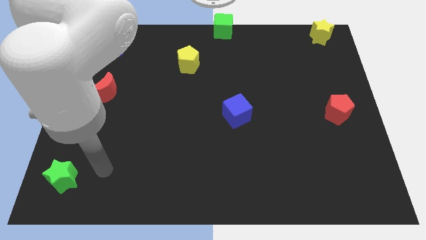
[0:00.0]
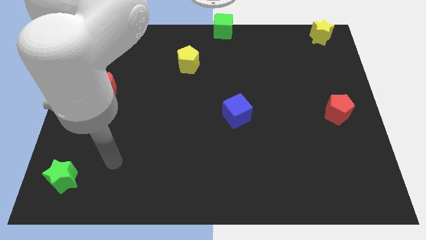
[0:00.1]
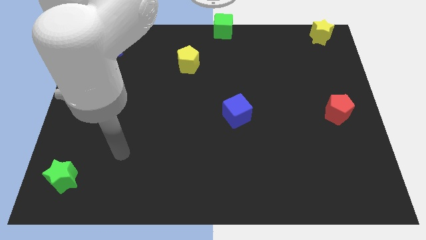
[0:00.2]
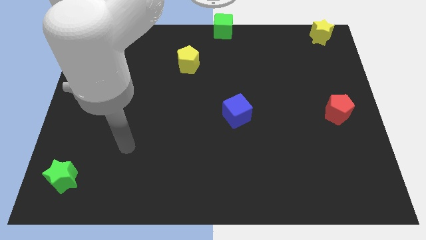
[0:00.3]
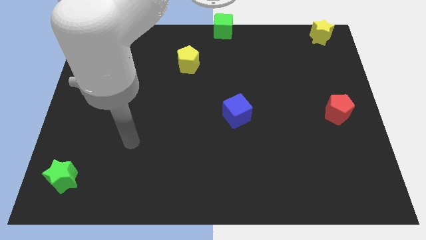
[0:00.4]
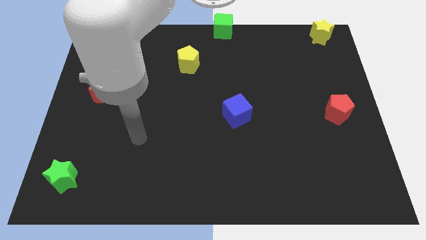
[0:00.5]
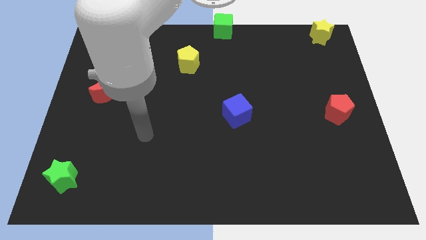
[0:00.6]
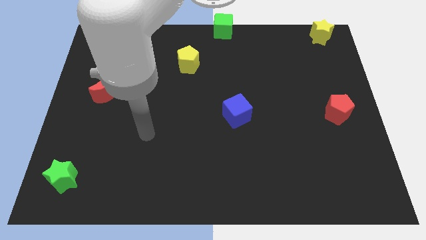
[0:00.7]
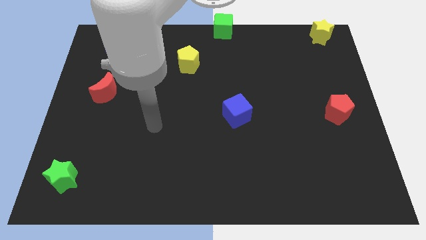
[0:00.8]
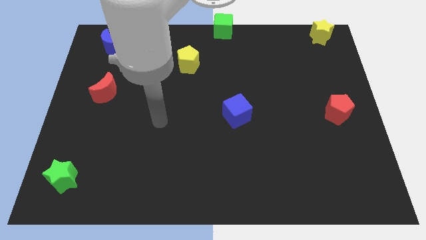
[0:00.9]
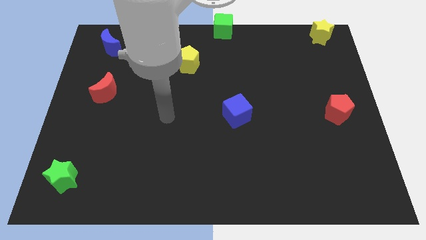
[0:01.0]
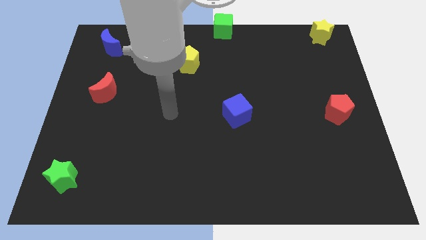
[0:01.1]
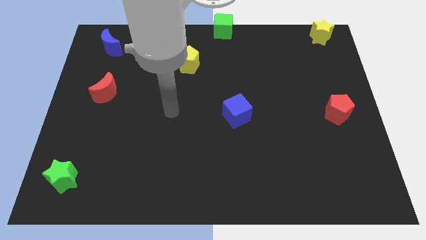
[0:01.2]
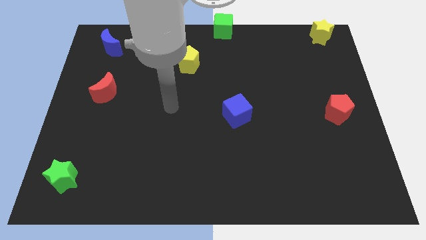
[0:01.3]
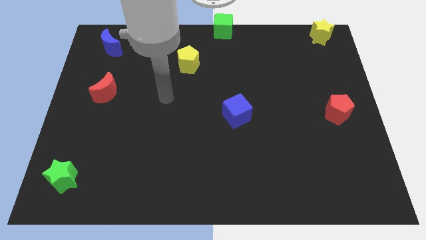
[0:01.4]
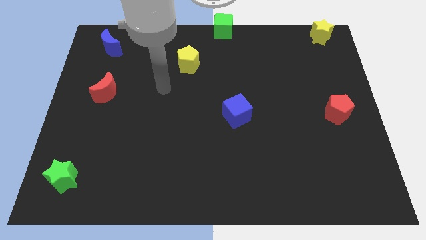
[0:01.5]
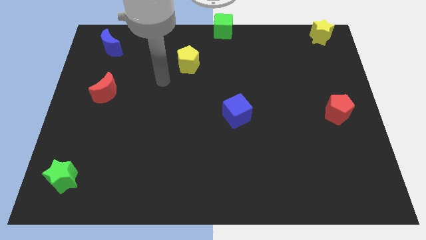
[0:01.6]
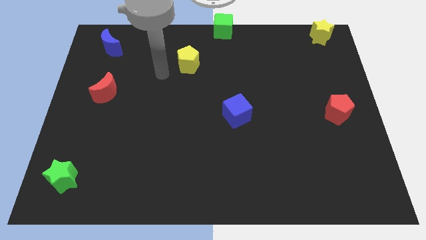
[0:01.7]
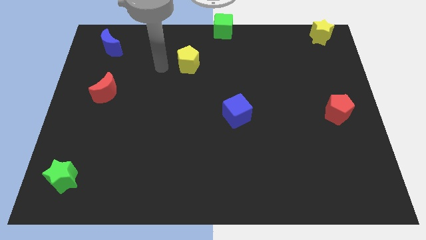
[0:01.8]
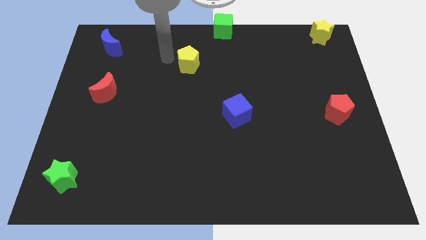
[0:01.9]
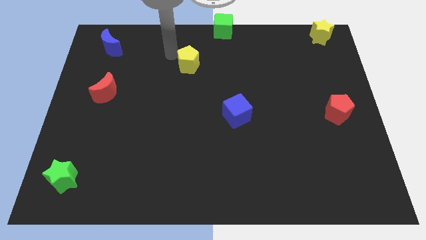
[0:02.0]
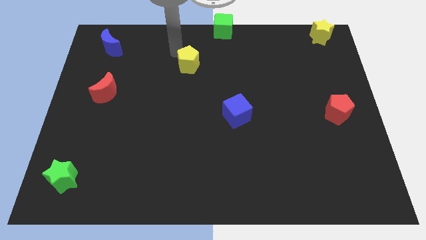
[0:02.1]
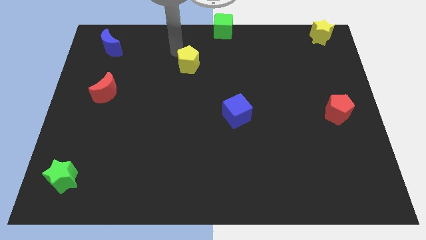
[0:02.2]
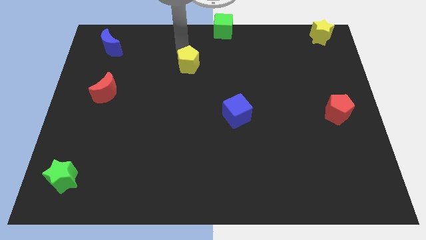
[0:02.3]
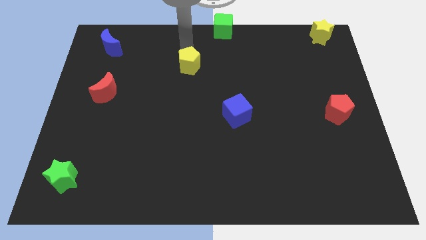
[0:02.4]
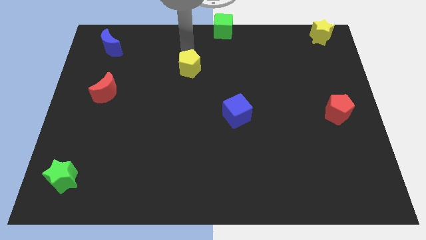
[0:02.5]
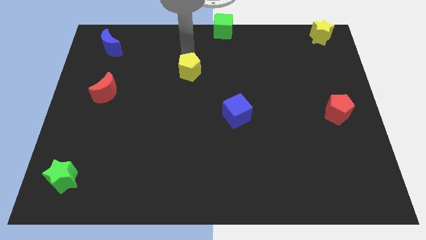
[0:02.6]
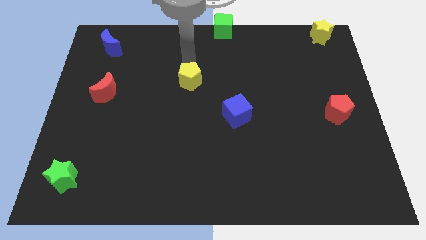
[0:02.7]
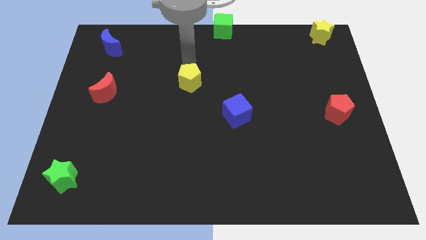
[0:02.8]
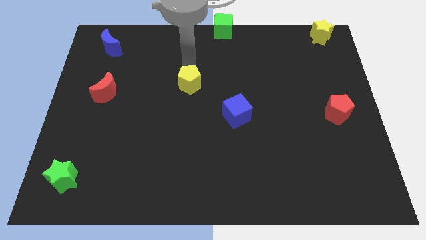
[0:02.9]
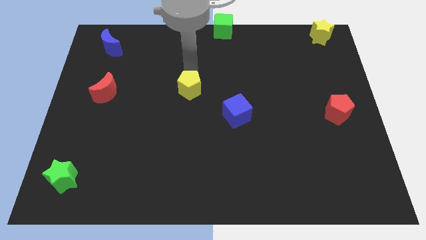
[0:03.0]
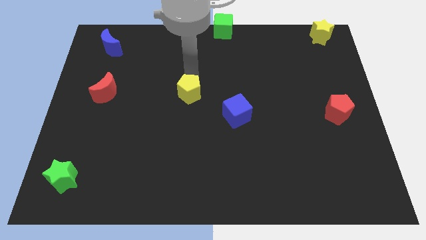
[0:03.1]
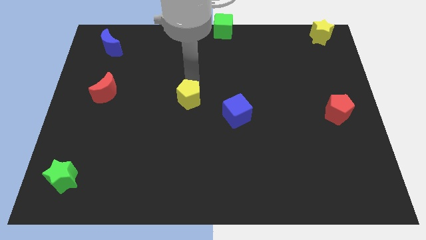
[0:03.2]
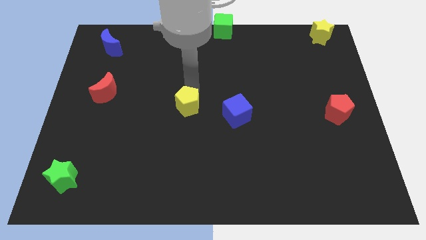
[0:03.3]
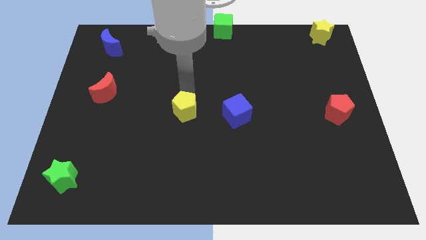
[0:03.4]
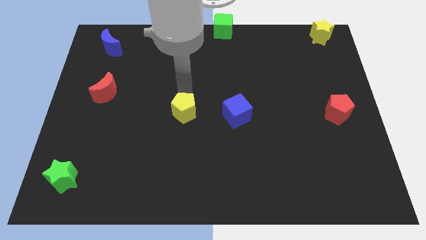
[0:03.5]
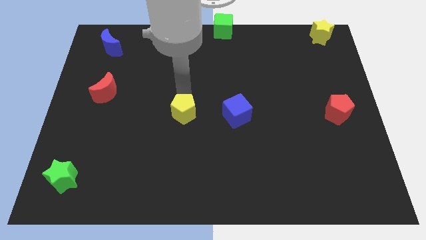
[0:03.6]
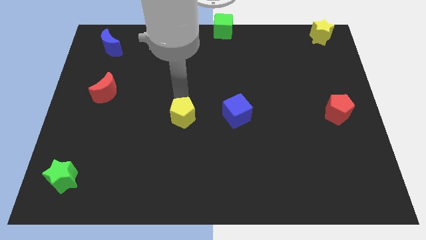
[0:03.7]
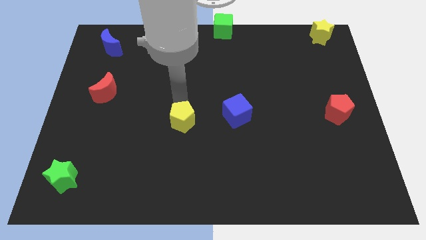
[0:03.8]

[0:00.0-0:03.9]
place the yellow pentagon to the left side of the blue cube

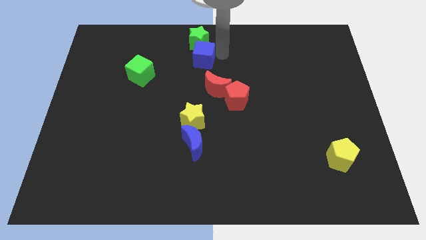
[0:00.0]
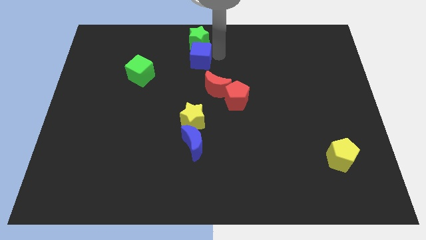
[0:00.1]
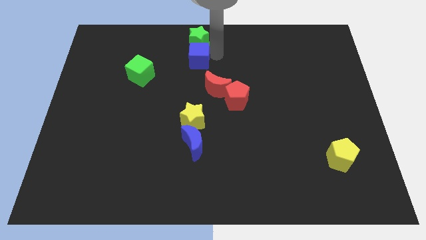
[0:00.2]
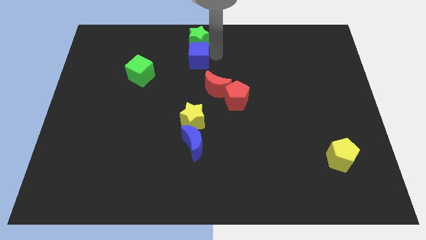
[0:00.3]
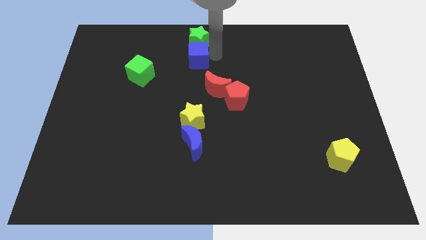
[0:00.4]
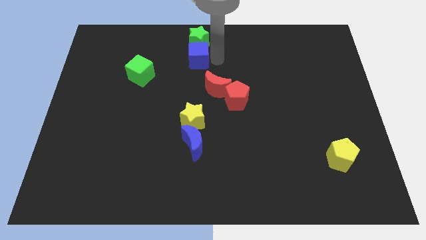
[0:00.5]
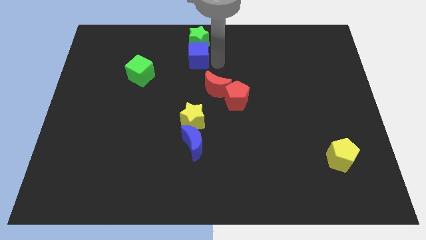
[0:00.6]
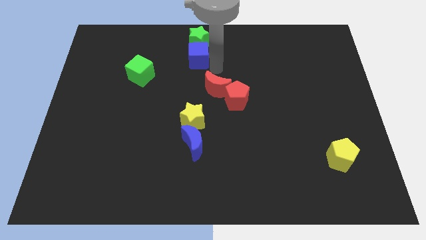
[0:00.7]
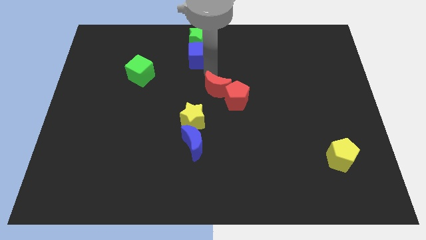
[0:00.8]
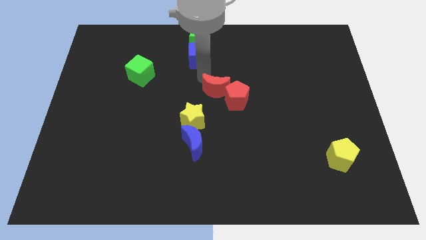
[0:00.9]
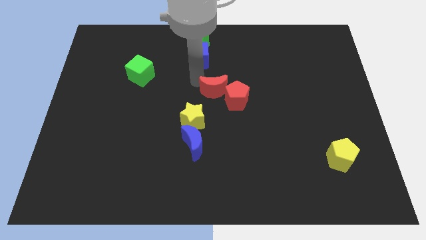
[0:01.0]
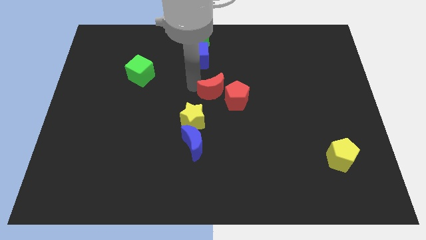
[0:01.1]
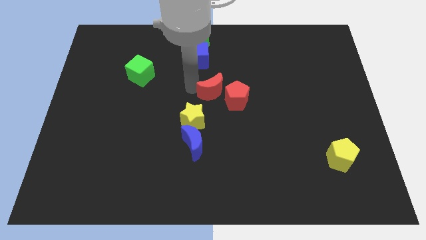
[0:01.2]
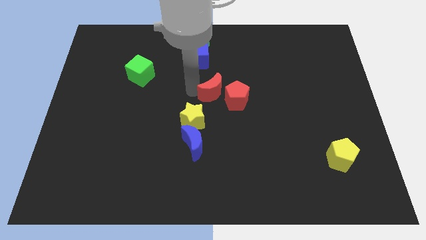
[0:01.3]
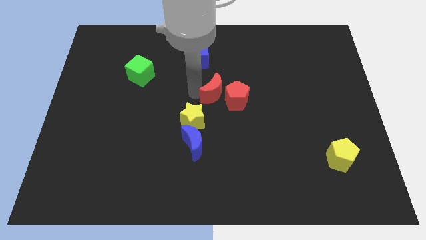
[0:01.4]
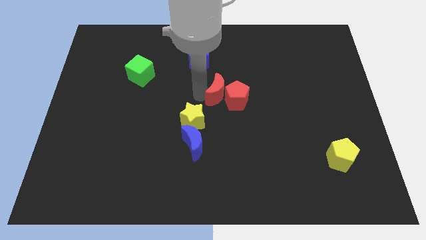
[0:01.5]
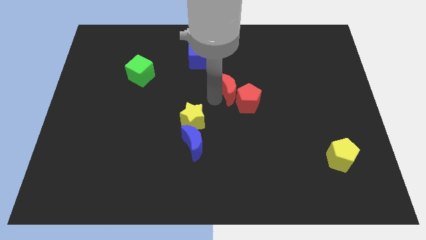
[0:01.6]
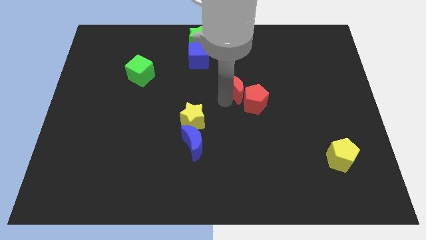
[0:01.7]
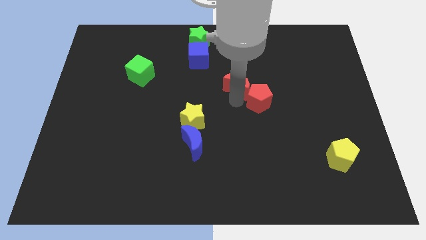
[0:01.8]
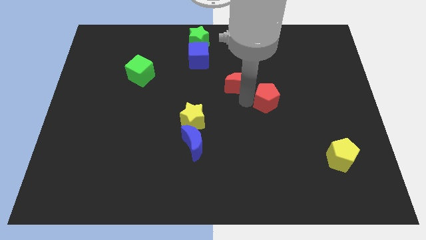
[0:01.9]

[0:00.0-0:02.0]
move the red moon near to the red pentagon

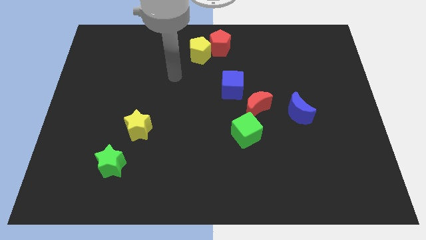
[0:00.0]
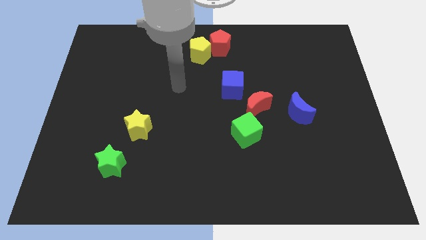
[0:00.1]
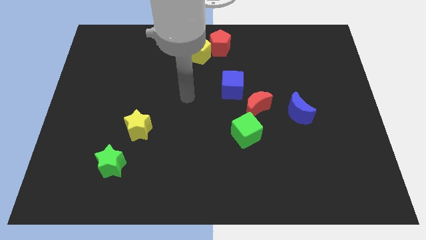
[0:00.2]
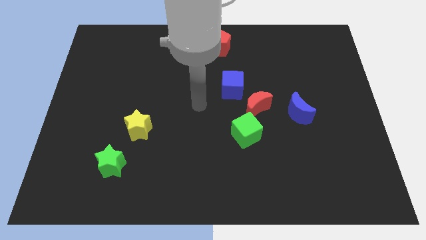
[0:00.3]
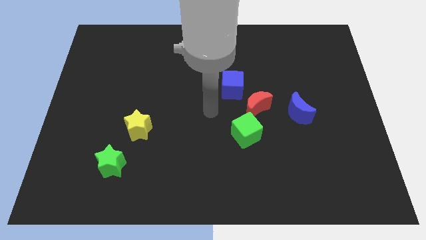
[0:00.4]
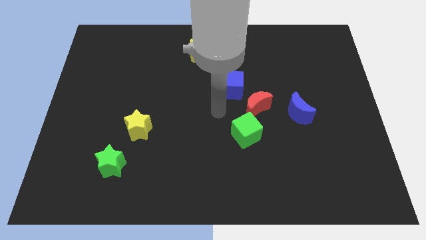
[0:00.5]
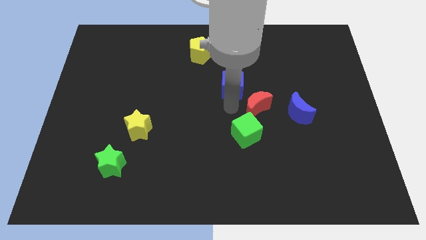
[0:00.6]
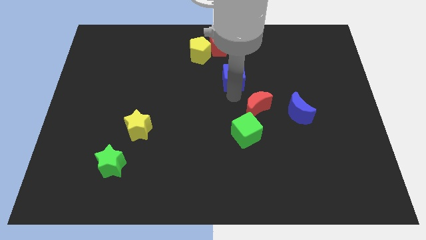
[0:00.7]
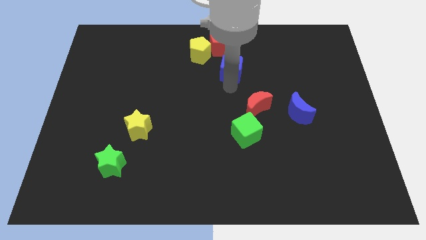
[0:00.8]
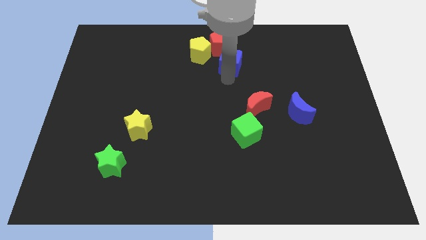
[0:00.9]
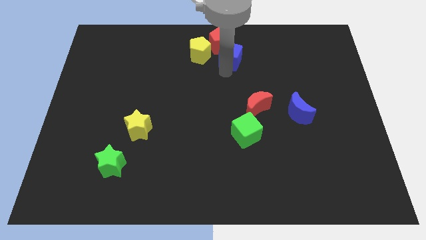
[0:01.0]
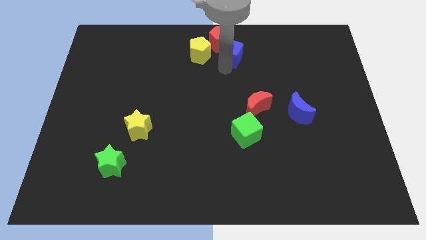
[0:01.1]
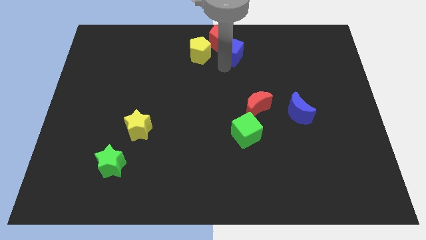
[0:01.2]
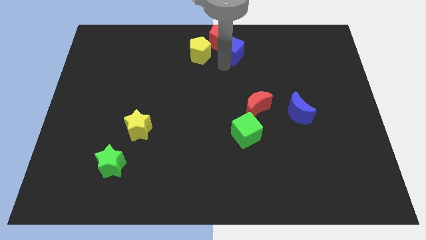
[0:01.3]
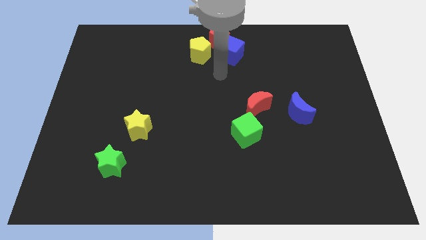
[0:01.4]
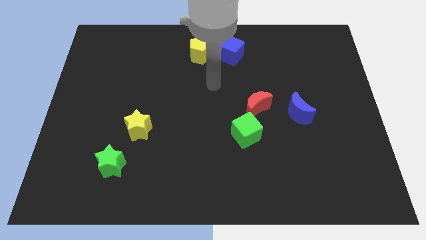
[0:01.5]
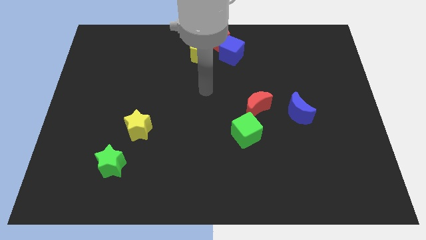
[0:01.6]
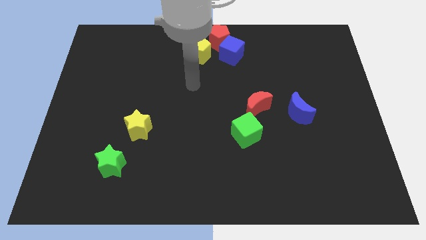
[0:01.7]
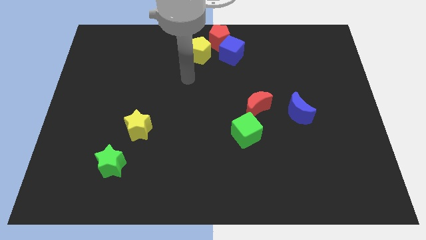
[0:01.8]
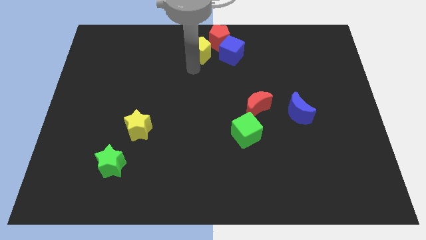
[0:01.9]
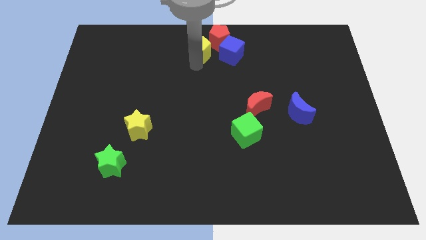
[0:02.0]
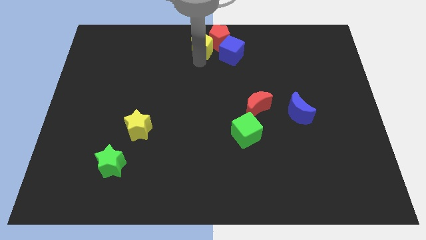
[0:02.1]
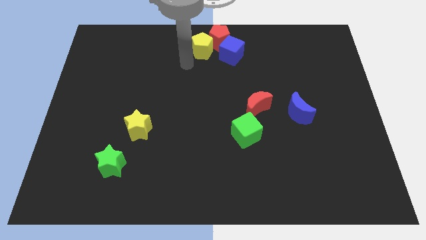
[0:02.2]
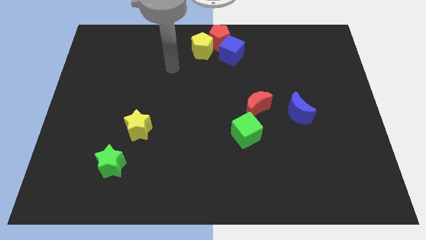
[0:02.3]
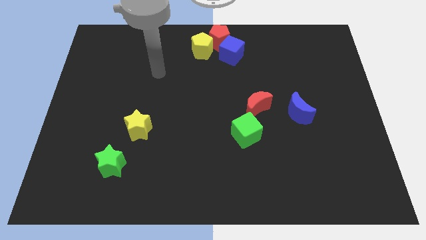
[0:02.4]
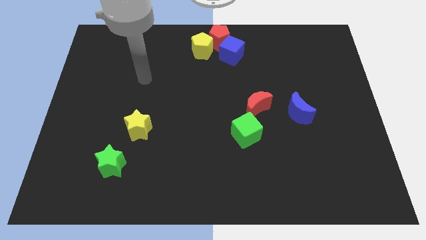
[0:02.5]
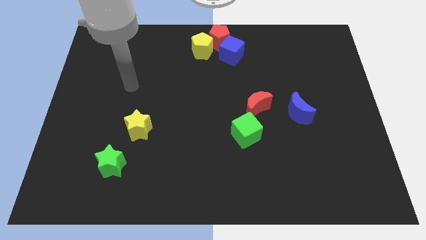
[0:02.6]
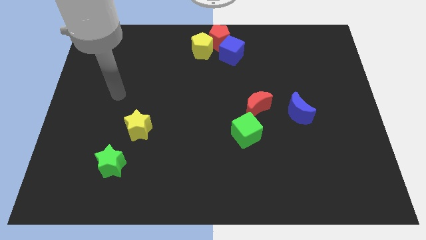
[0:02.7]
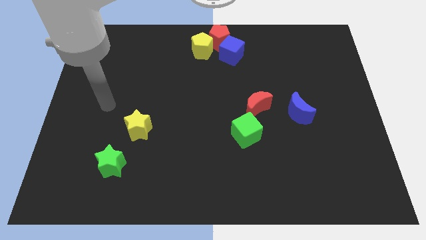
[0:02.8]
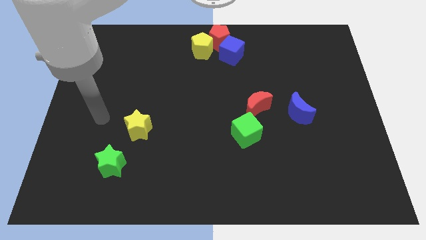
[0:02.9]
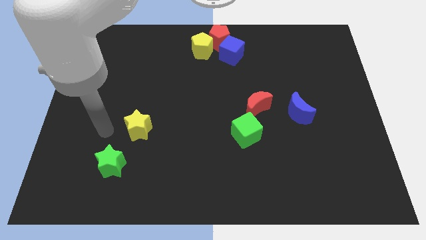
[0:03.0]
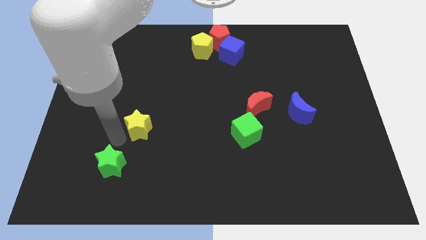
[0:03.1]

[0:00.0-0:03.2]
move the blue cube and the yellow pentagon into the red pentagon
